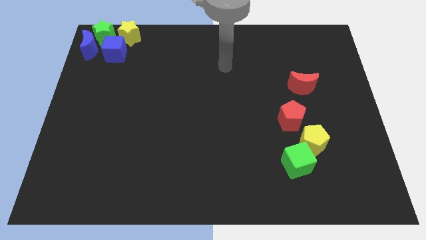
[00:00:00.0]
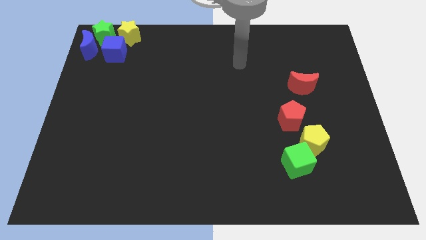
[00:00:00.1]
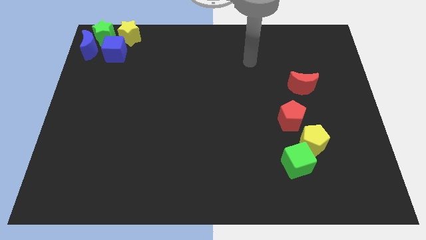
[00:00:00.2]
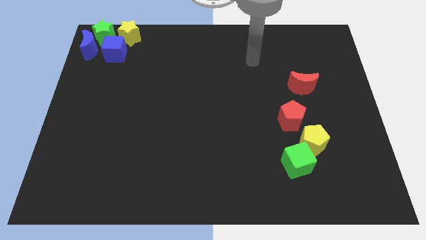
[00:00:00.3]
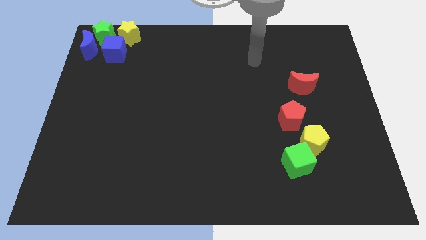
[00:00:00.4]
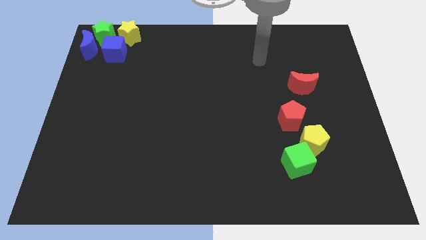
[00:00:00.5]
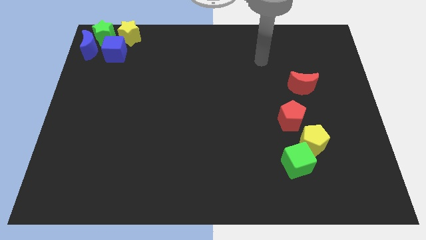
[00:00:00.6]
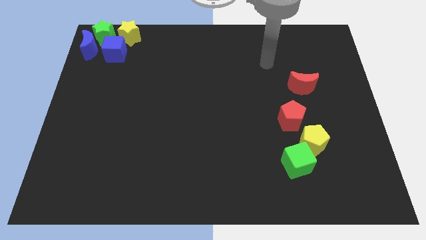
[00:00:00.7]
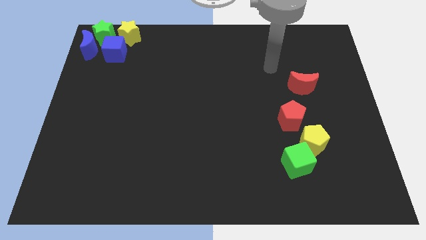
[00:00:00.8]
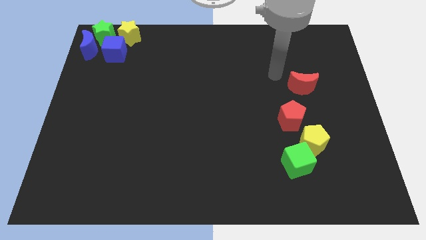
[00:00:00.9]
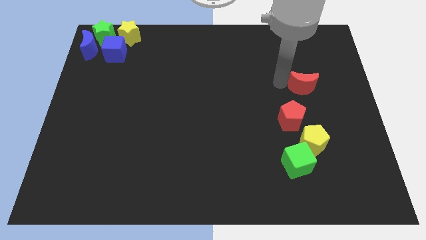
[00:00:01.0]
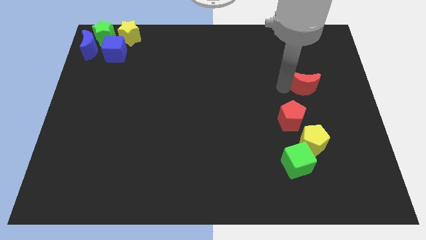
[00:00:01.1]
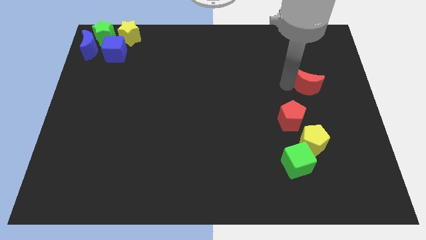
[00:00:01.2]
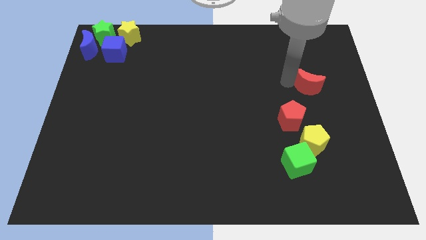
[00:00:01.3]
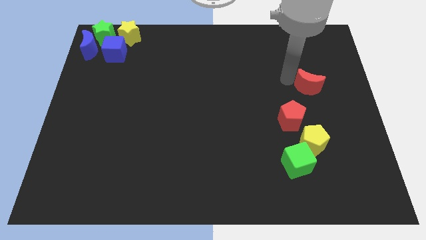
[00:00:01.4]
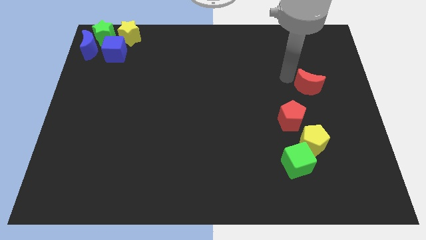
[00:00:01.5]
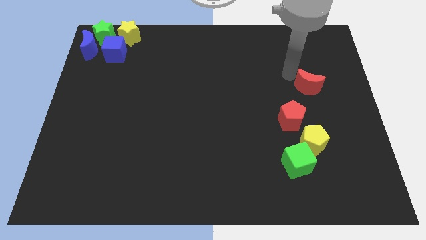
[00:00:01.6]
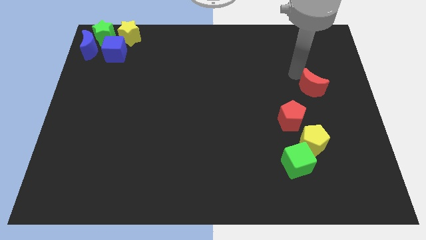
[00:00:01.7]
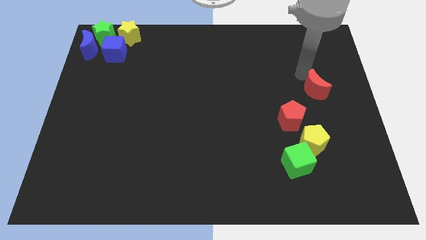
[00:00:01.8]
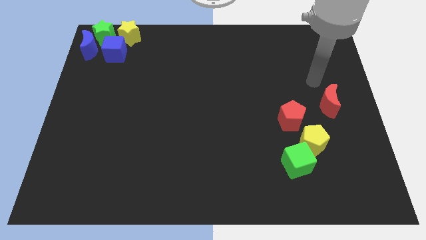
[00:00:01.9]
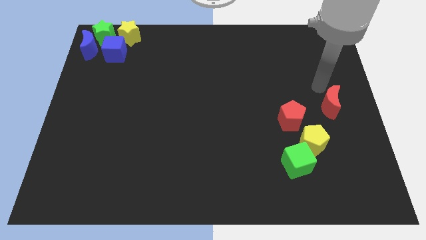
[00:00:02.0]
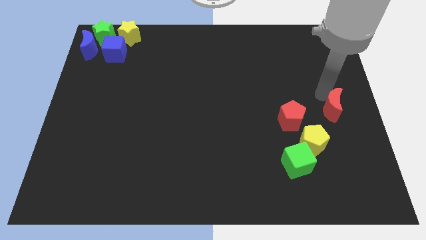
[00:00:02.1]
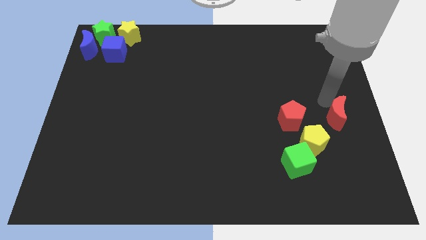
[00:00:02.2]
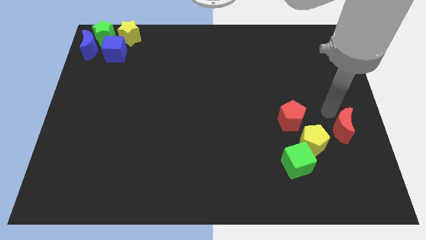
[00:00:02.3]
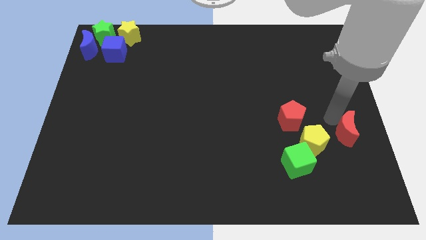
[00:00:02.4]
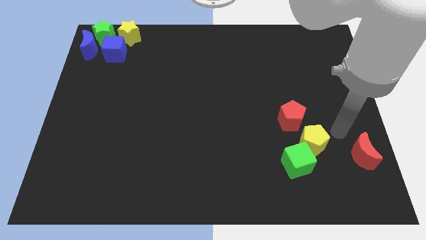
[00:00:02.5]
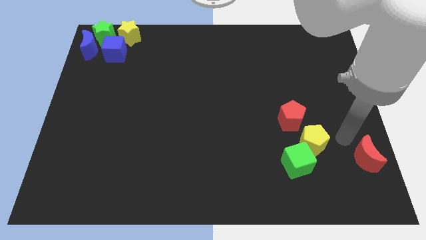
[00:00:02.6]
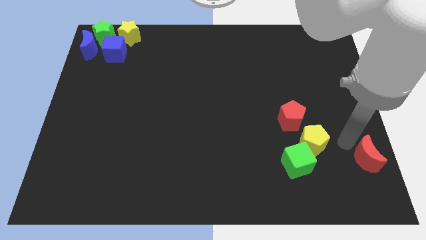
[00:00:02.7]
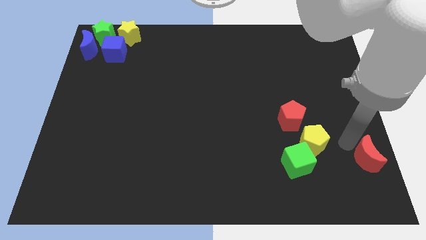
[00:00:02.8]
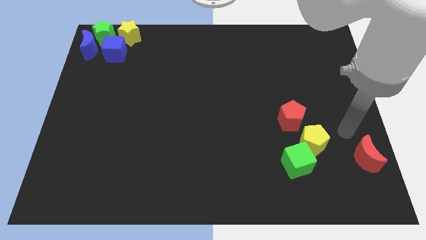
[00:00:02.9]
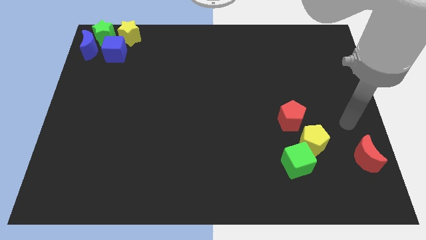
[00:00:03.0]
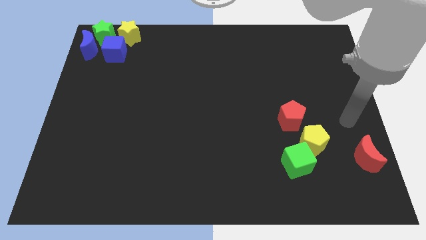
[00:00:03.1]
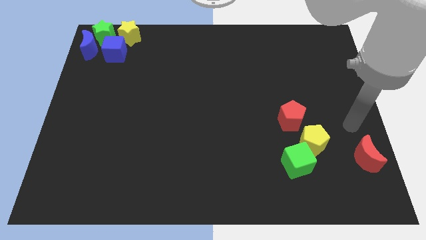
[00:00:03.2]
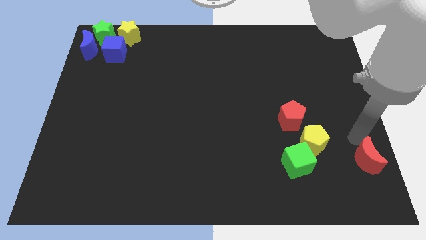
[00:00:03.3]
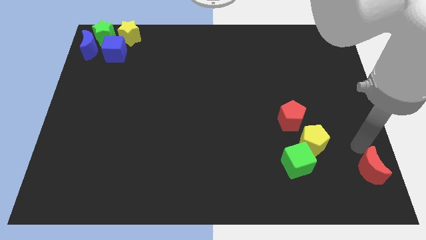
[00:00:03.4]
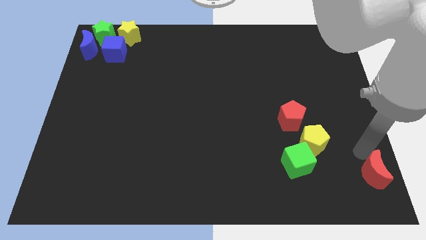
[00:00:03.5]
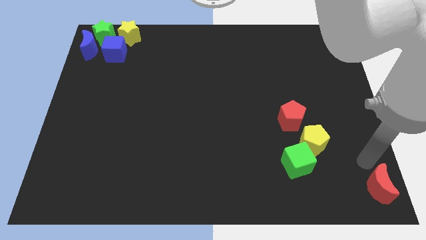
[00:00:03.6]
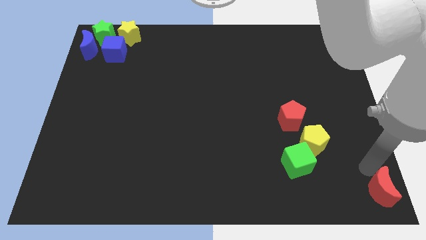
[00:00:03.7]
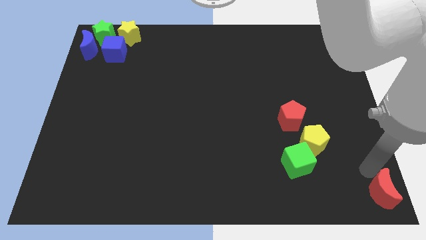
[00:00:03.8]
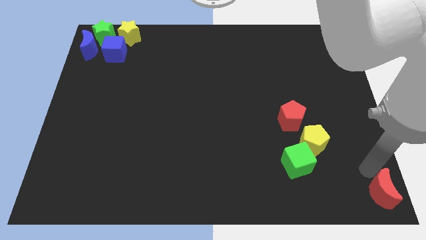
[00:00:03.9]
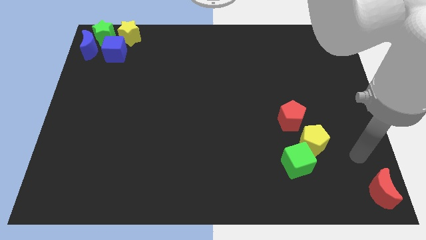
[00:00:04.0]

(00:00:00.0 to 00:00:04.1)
push red crescent to right bottom corner

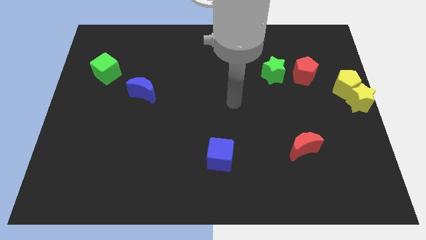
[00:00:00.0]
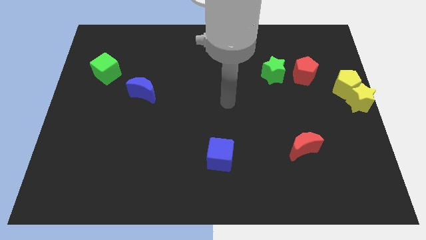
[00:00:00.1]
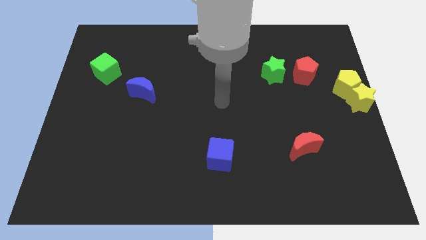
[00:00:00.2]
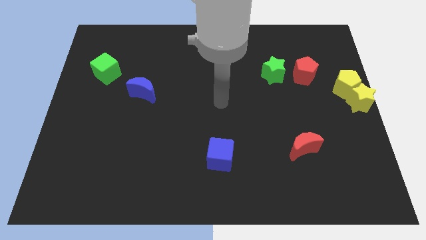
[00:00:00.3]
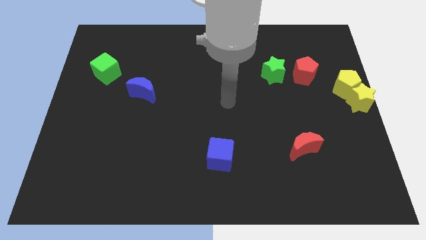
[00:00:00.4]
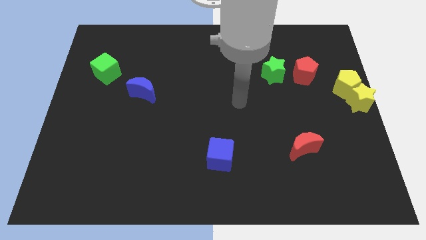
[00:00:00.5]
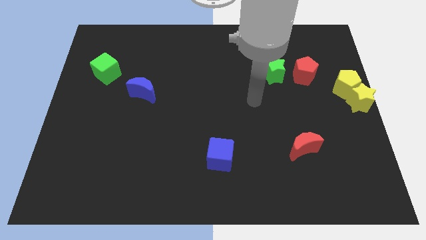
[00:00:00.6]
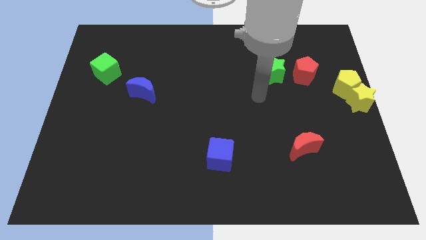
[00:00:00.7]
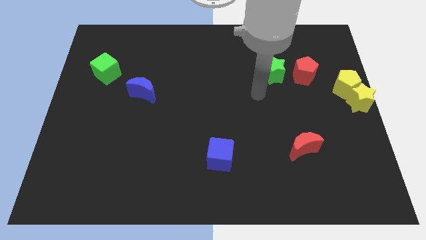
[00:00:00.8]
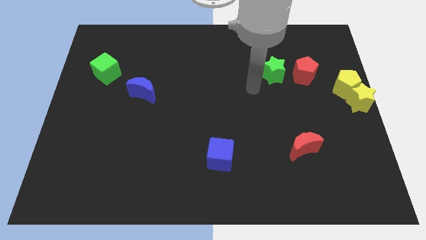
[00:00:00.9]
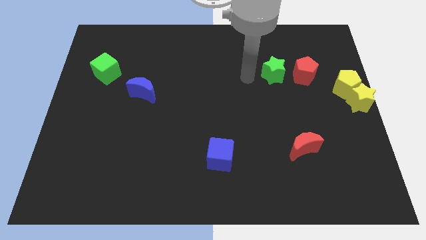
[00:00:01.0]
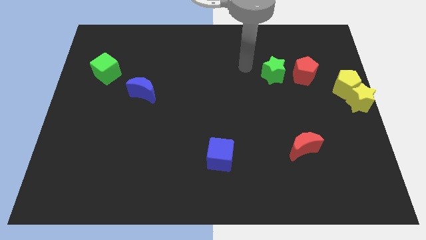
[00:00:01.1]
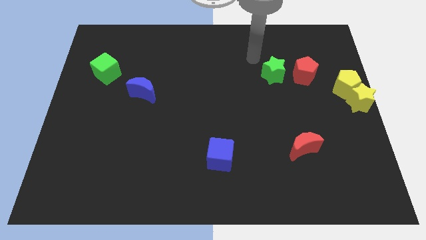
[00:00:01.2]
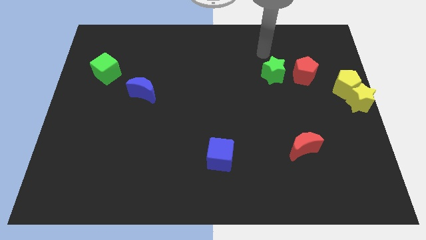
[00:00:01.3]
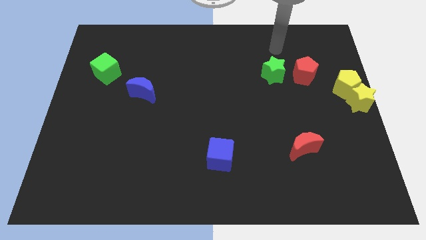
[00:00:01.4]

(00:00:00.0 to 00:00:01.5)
put your arm to the top of green star

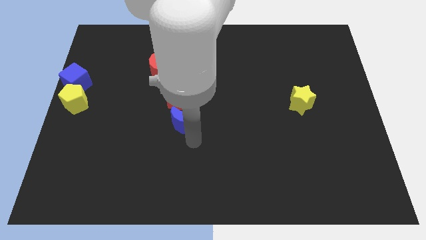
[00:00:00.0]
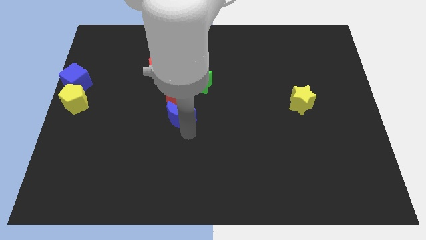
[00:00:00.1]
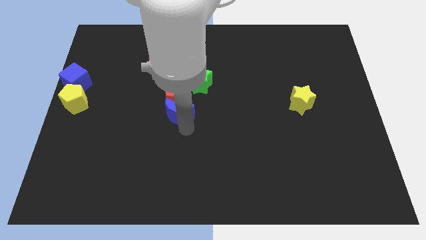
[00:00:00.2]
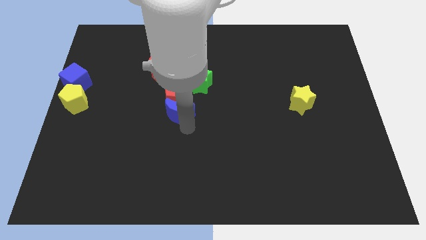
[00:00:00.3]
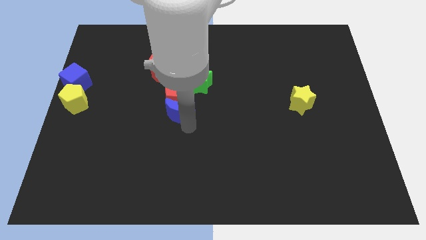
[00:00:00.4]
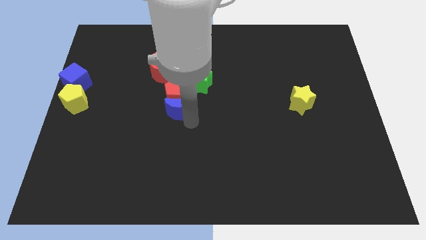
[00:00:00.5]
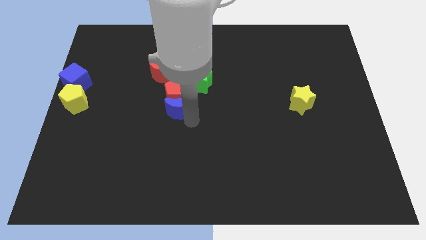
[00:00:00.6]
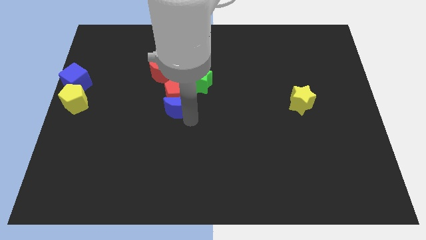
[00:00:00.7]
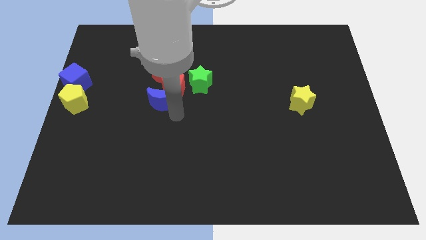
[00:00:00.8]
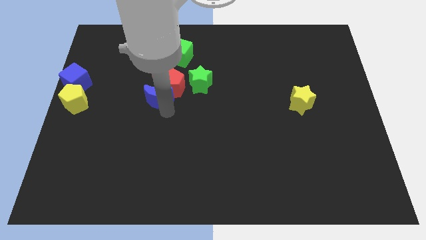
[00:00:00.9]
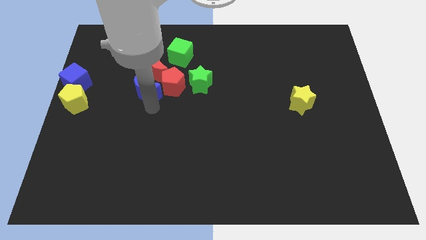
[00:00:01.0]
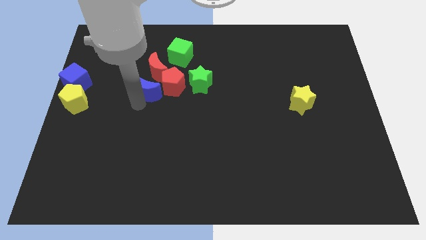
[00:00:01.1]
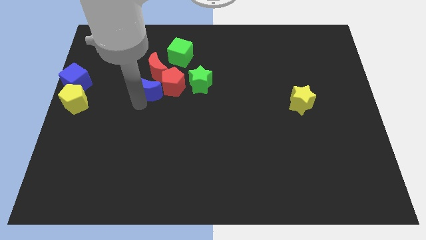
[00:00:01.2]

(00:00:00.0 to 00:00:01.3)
push the blue crescent into the red pentagon

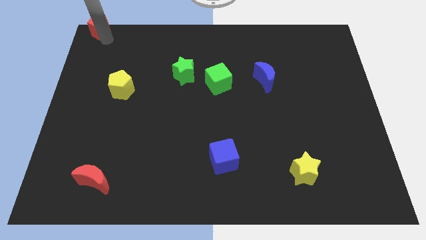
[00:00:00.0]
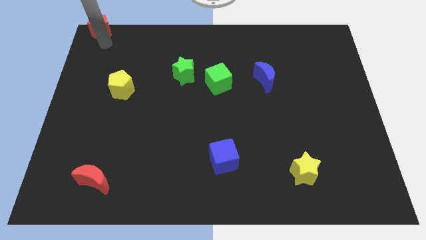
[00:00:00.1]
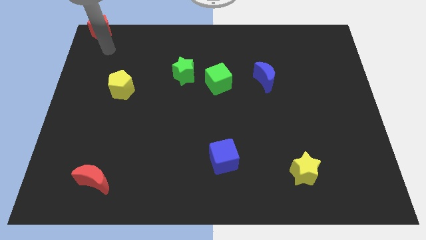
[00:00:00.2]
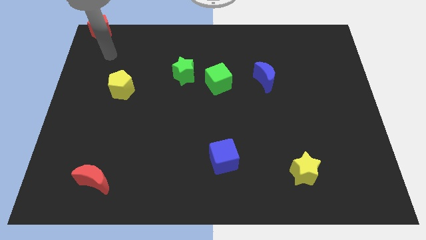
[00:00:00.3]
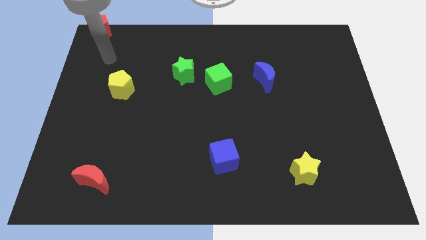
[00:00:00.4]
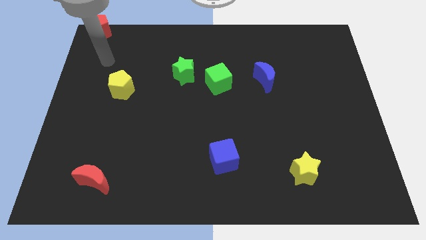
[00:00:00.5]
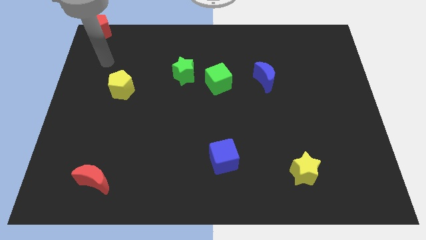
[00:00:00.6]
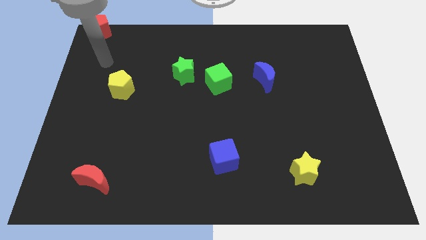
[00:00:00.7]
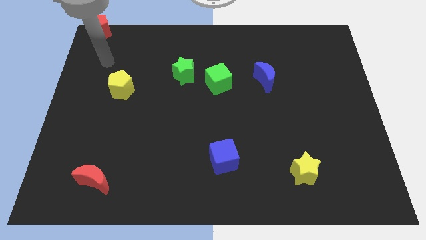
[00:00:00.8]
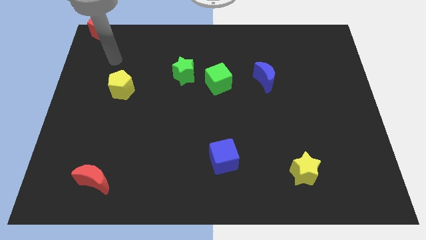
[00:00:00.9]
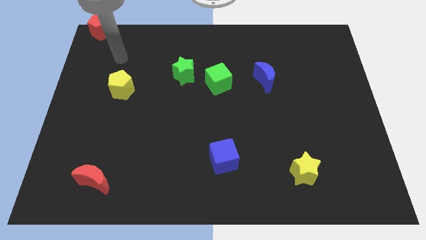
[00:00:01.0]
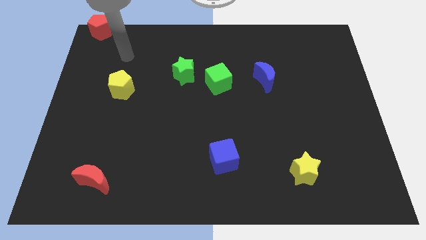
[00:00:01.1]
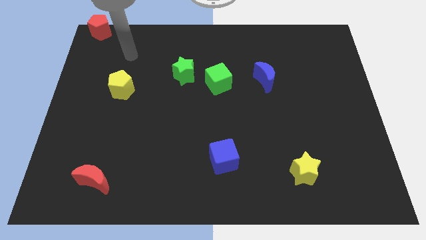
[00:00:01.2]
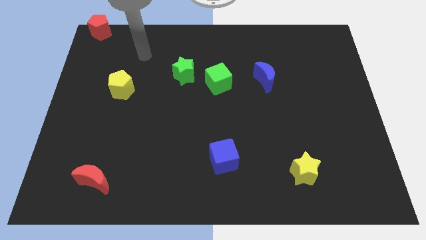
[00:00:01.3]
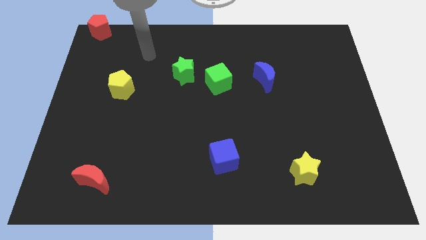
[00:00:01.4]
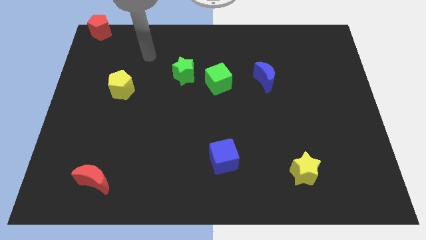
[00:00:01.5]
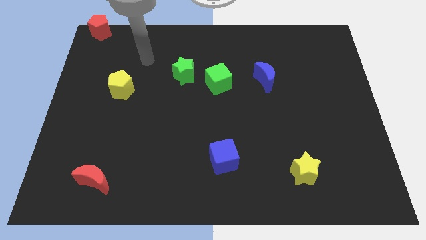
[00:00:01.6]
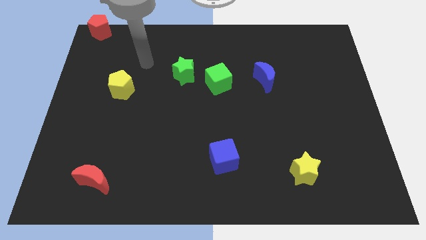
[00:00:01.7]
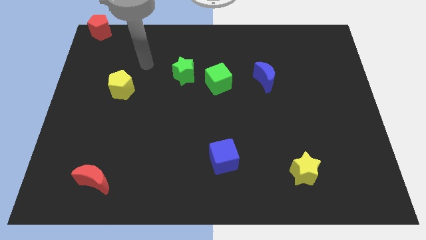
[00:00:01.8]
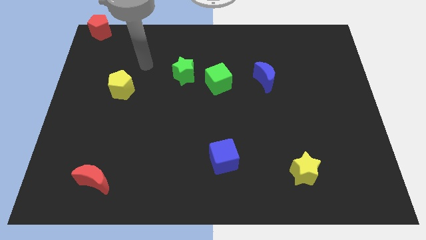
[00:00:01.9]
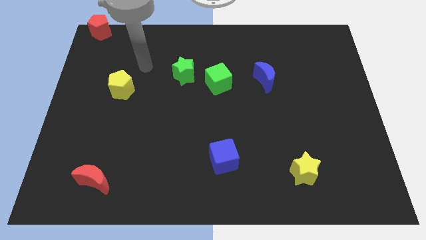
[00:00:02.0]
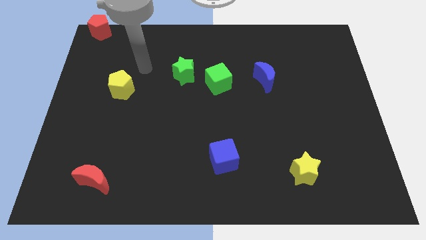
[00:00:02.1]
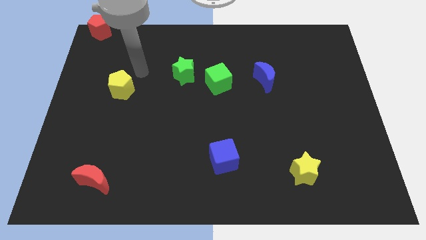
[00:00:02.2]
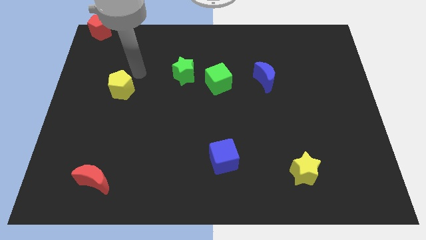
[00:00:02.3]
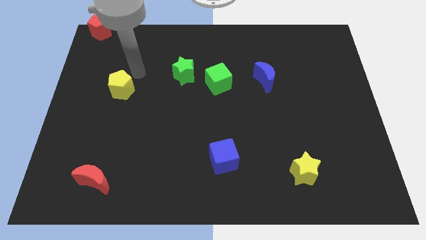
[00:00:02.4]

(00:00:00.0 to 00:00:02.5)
point your arm at the top right side of yellow pentagon
